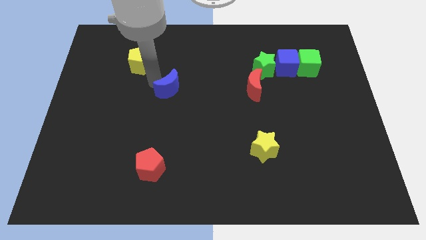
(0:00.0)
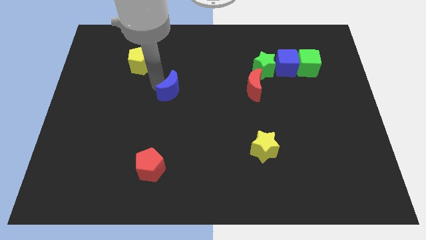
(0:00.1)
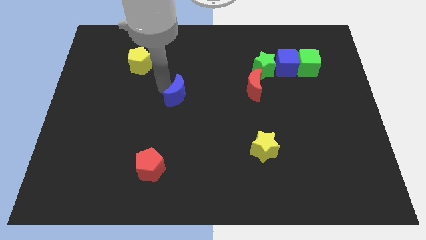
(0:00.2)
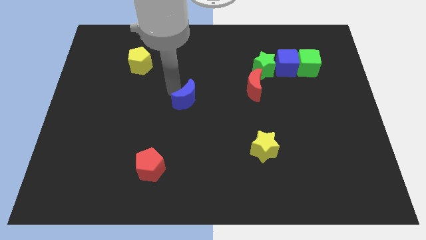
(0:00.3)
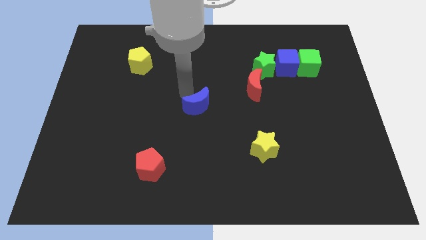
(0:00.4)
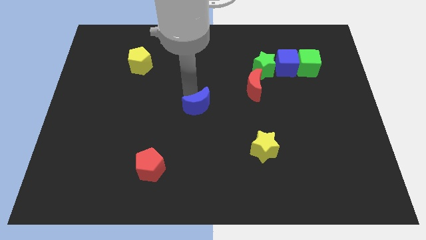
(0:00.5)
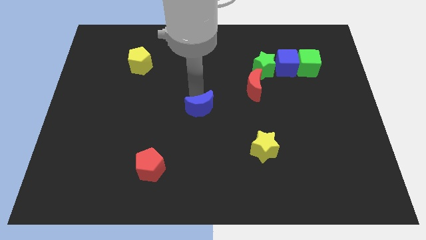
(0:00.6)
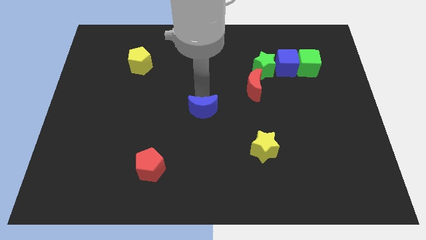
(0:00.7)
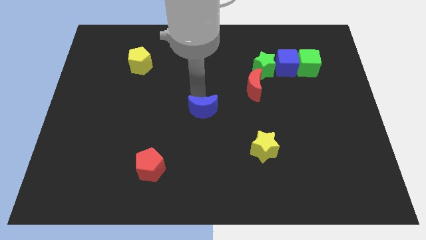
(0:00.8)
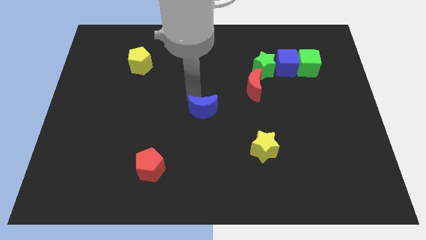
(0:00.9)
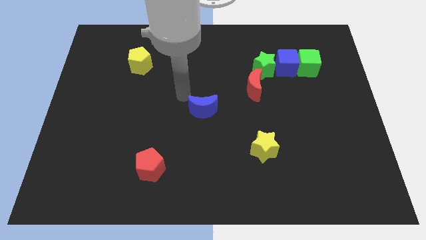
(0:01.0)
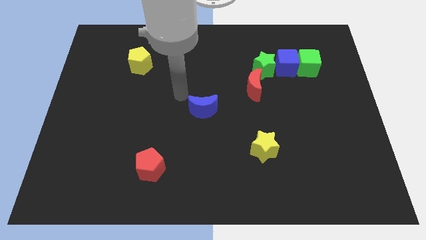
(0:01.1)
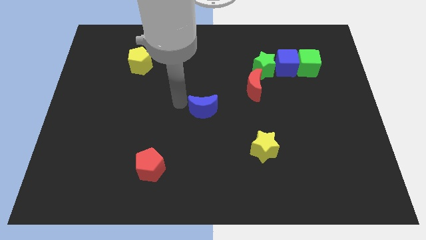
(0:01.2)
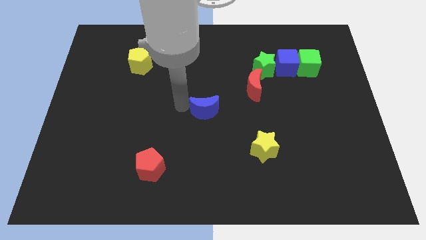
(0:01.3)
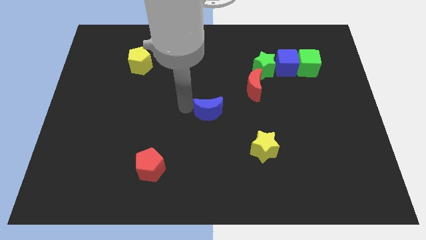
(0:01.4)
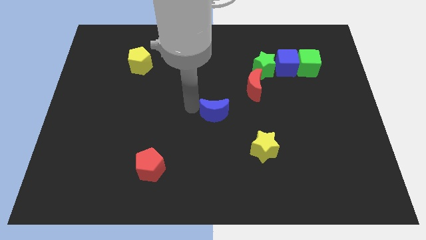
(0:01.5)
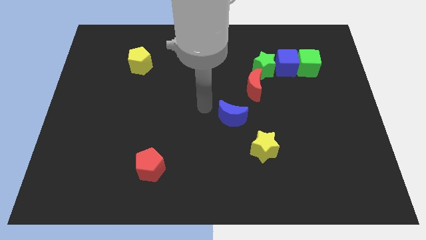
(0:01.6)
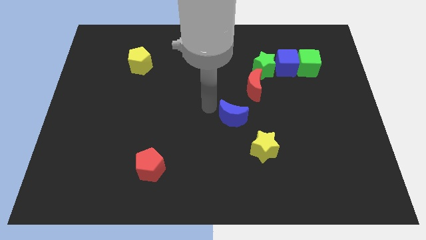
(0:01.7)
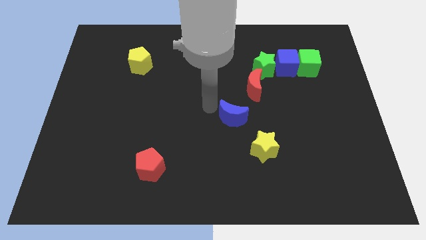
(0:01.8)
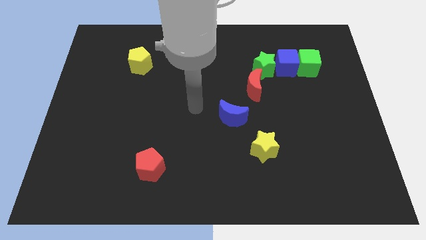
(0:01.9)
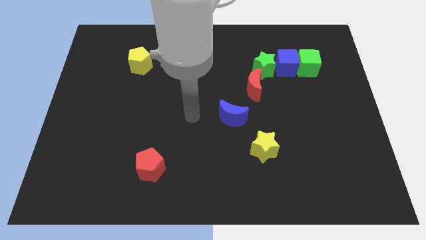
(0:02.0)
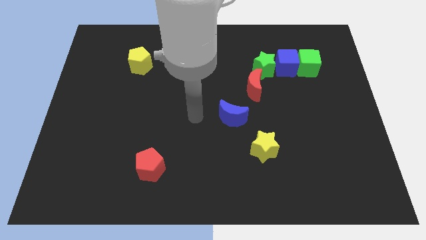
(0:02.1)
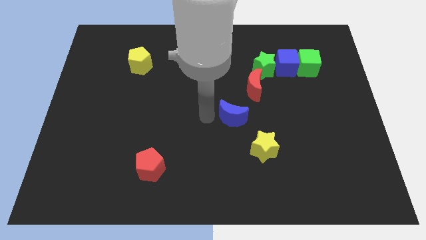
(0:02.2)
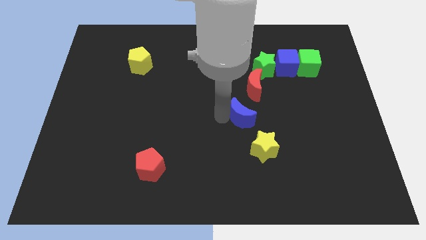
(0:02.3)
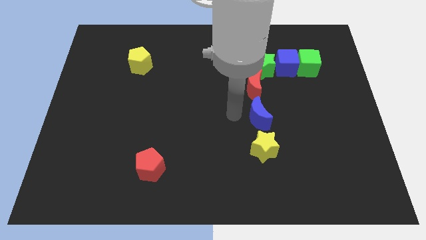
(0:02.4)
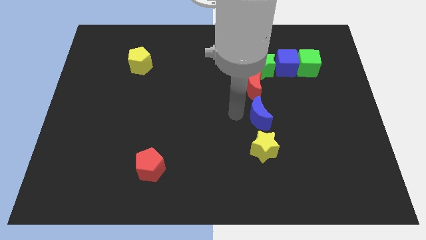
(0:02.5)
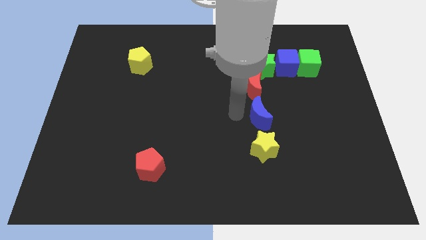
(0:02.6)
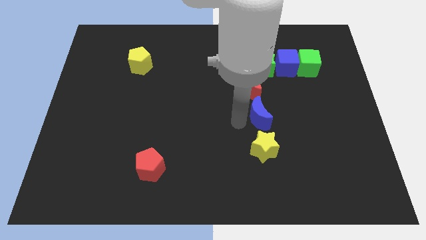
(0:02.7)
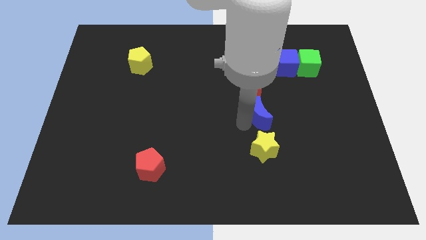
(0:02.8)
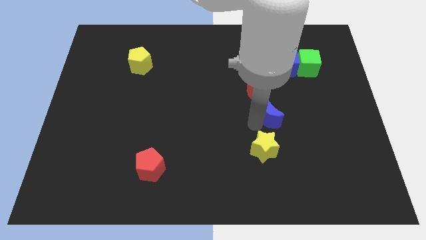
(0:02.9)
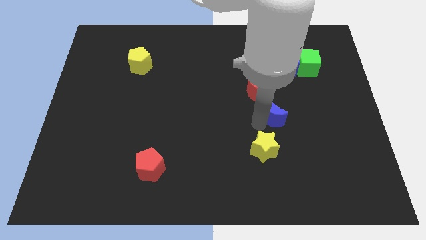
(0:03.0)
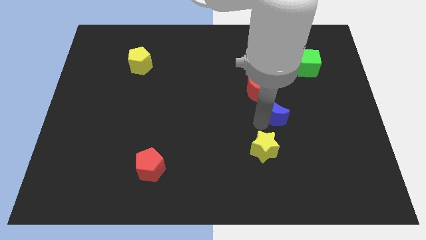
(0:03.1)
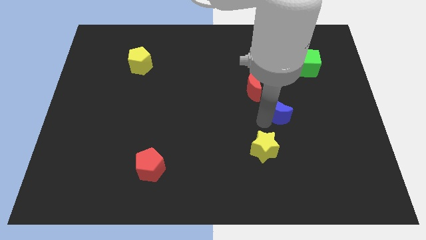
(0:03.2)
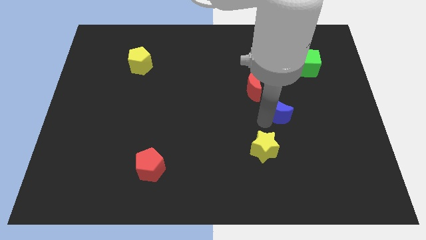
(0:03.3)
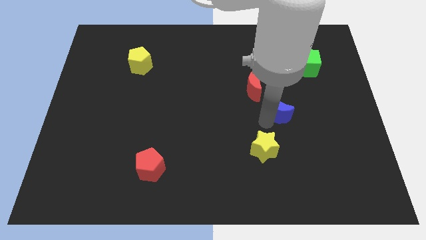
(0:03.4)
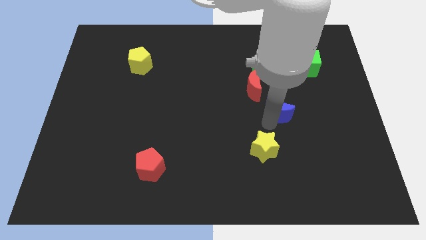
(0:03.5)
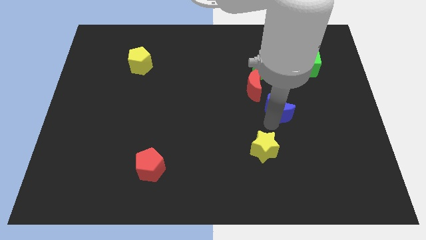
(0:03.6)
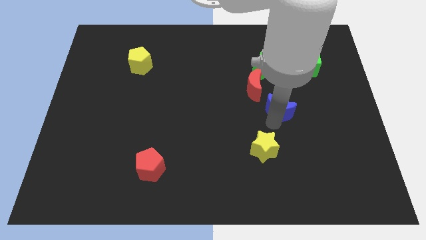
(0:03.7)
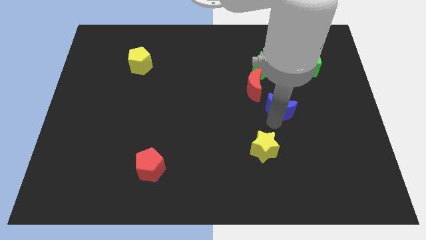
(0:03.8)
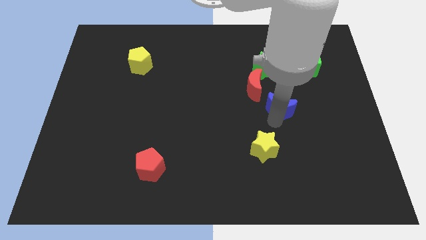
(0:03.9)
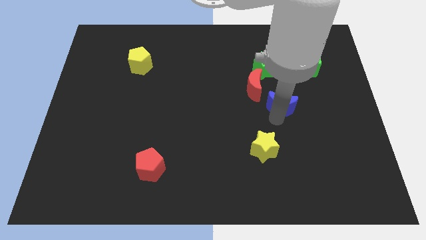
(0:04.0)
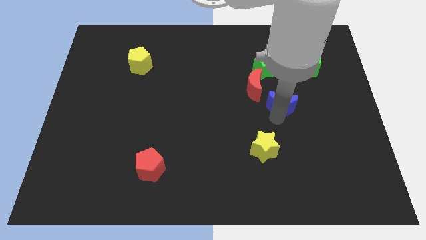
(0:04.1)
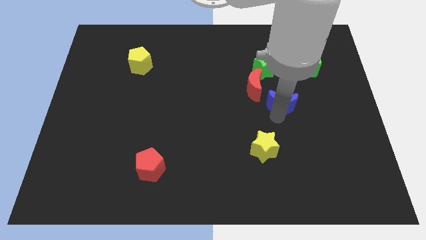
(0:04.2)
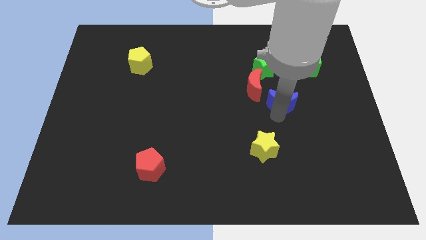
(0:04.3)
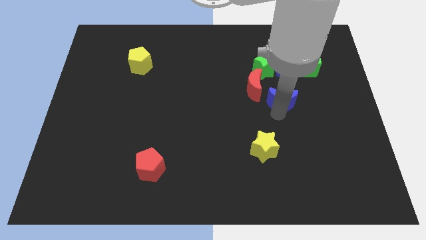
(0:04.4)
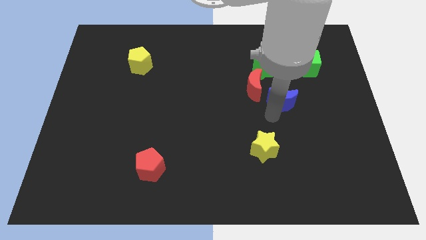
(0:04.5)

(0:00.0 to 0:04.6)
move the blue crescent to the bottom right side of the red crescent

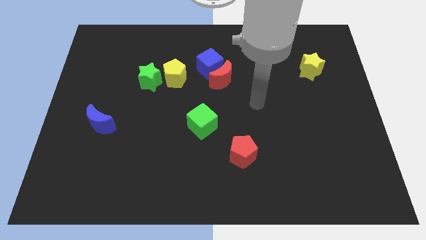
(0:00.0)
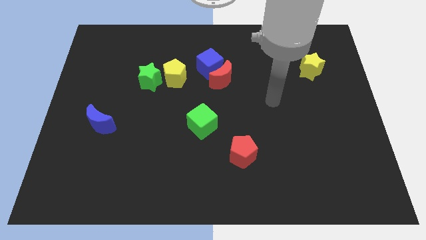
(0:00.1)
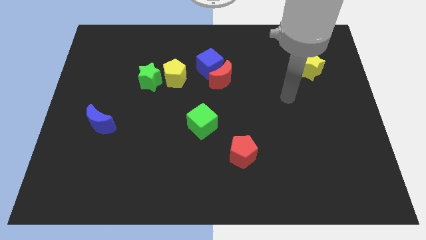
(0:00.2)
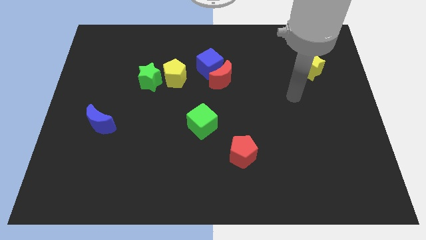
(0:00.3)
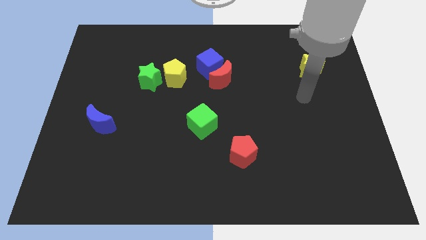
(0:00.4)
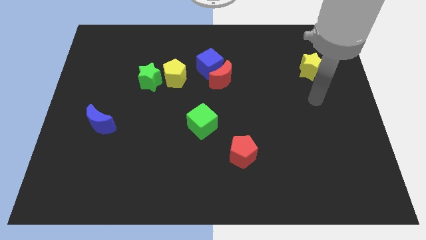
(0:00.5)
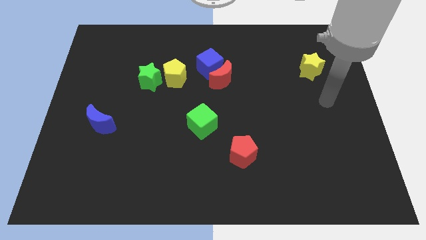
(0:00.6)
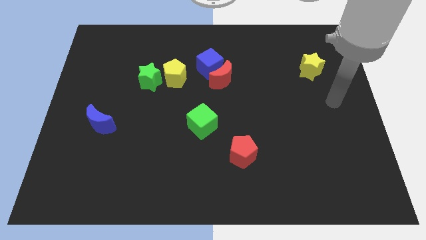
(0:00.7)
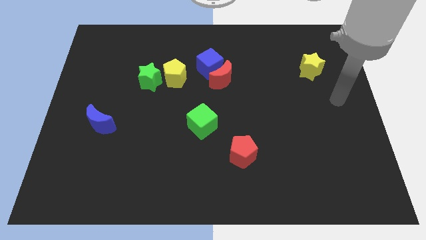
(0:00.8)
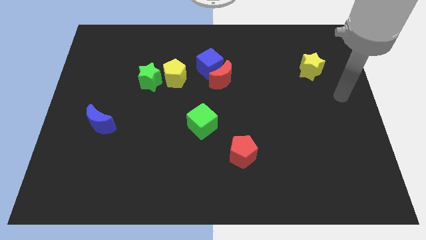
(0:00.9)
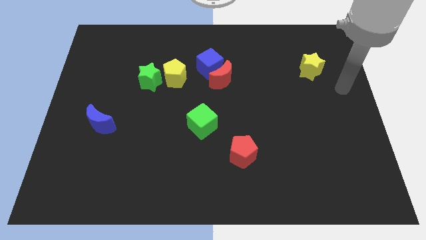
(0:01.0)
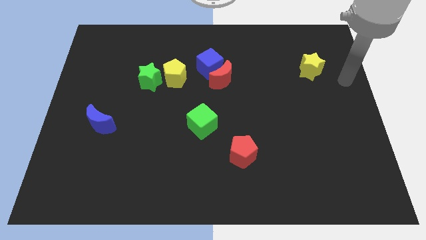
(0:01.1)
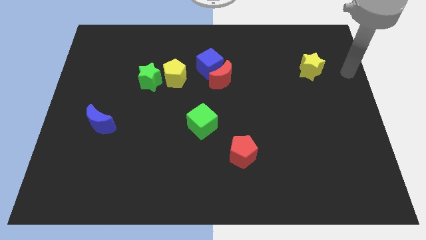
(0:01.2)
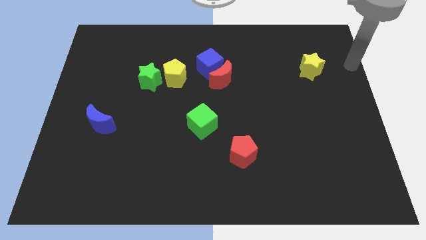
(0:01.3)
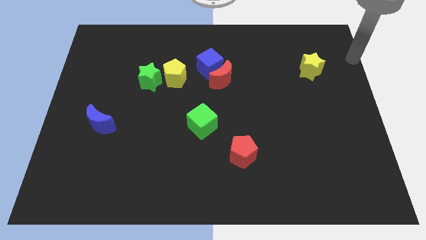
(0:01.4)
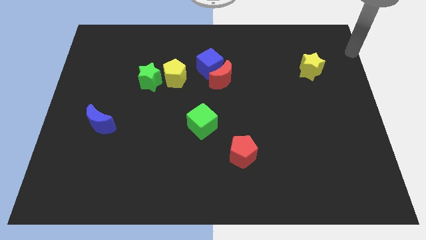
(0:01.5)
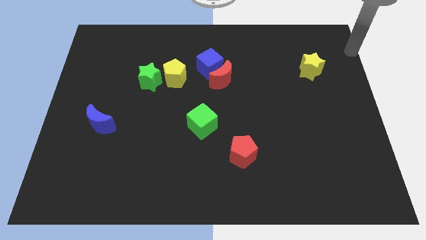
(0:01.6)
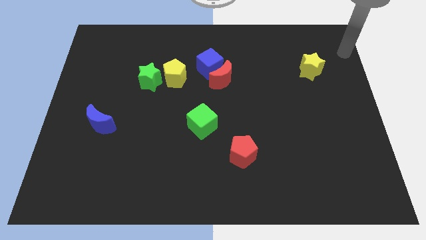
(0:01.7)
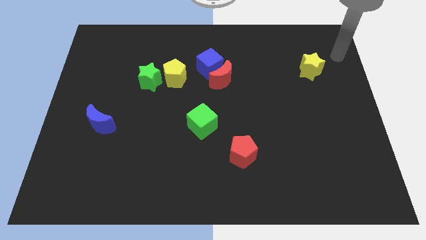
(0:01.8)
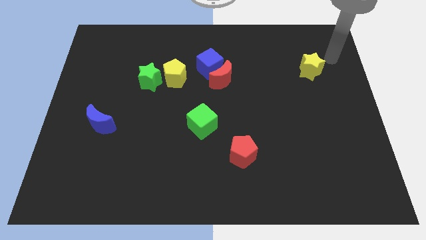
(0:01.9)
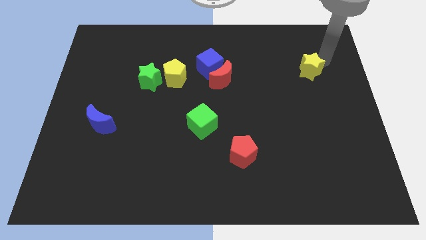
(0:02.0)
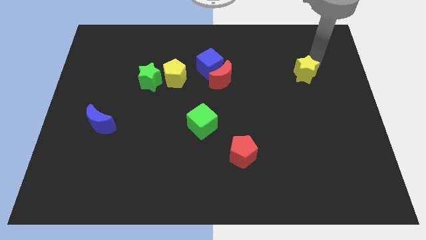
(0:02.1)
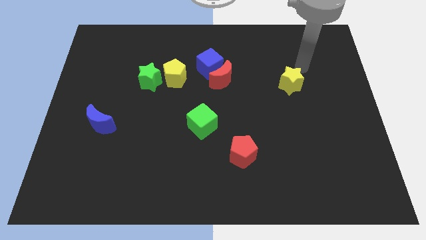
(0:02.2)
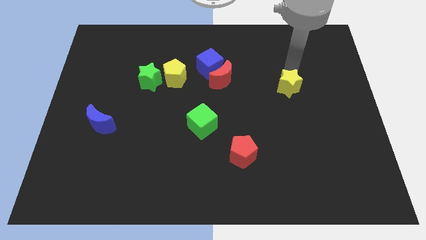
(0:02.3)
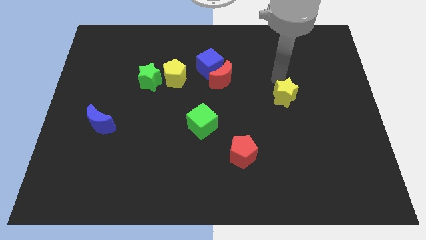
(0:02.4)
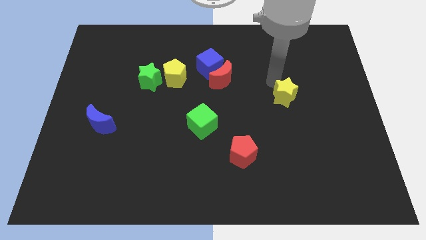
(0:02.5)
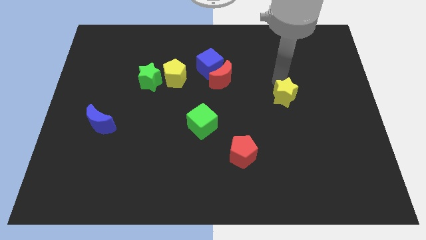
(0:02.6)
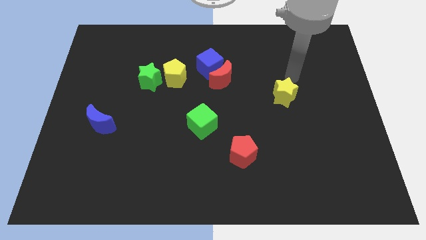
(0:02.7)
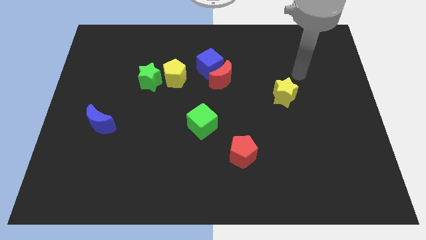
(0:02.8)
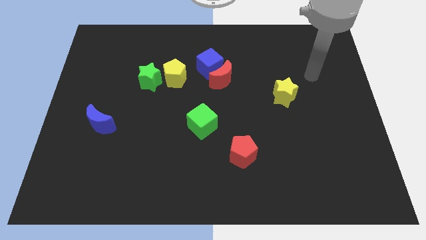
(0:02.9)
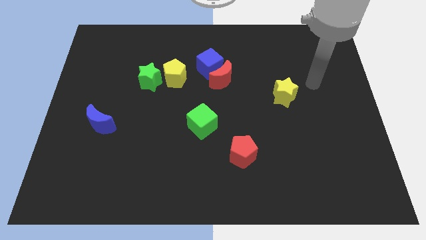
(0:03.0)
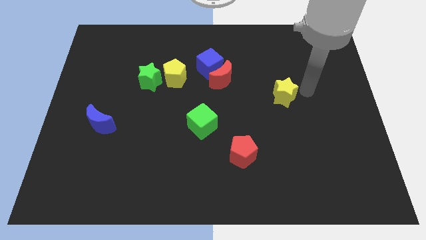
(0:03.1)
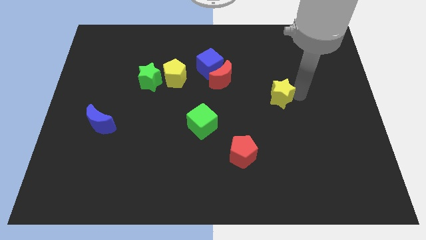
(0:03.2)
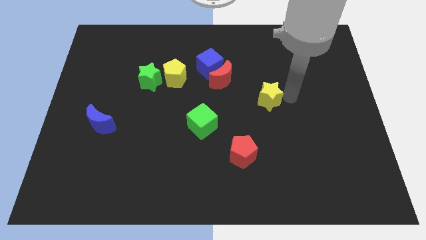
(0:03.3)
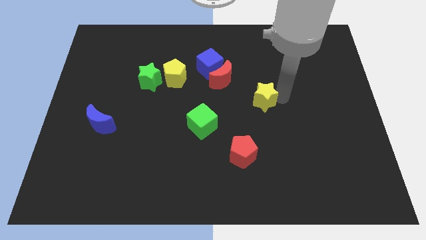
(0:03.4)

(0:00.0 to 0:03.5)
drag the yellow star diagonal top right to green cube

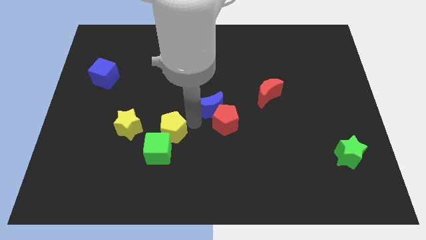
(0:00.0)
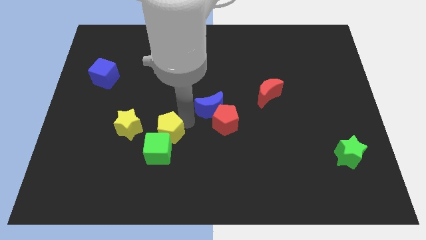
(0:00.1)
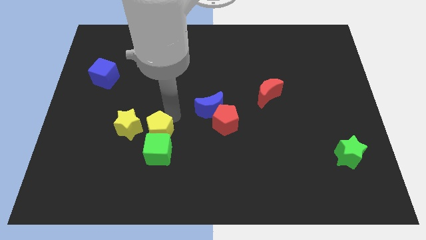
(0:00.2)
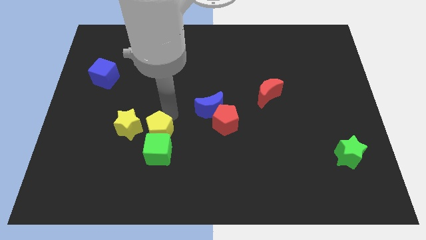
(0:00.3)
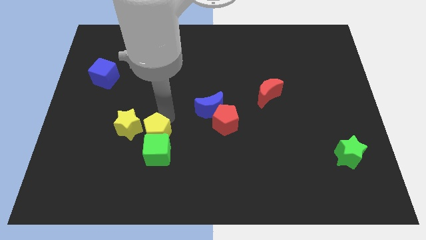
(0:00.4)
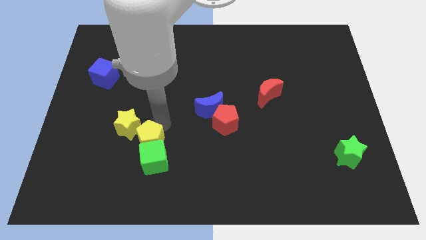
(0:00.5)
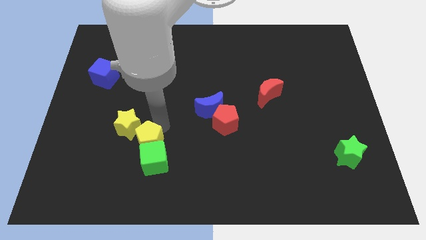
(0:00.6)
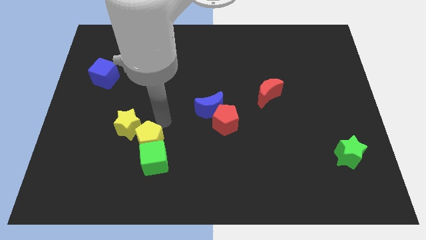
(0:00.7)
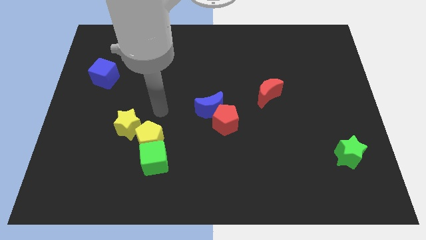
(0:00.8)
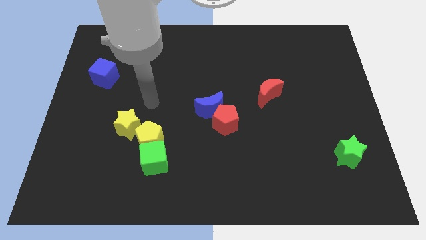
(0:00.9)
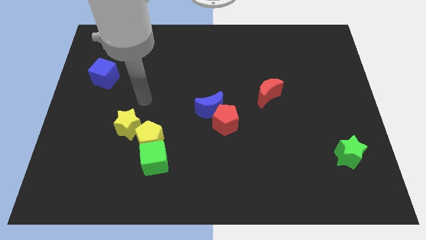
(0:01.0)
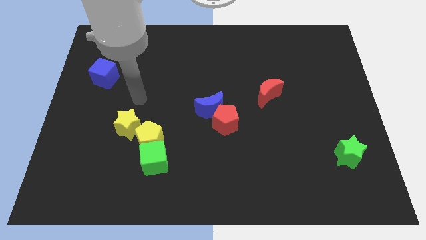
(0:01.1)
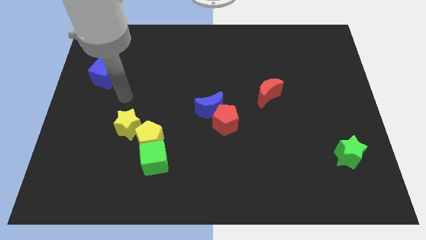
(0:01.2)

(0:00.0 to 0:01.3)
move the yellow pentagon into the green cube
